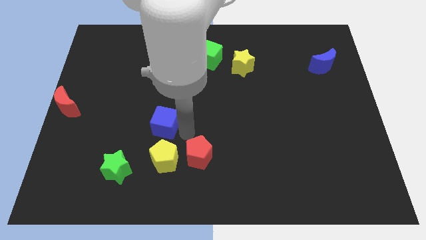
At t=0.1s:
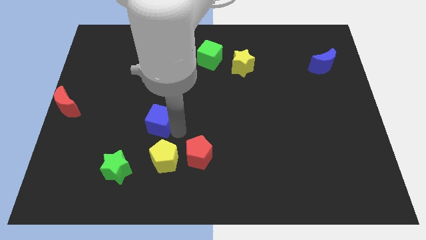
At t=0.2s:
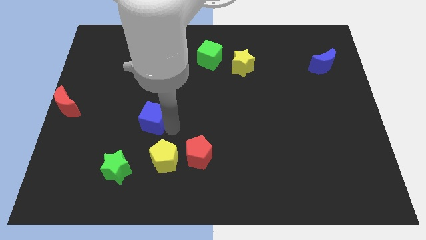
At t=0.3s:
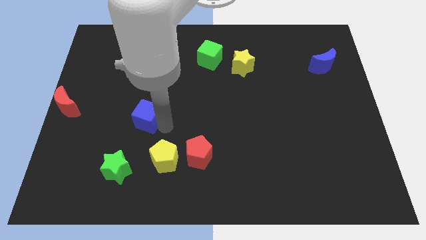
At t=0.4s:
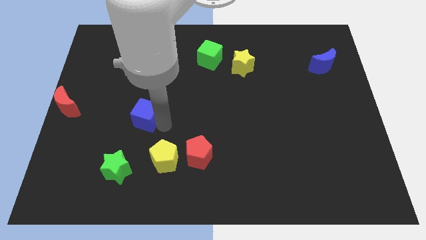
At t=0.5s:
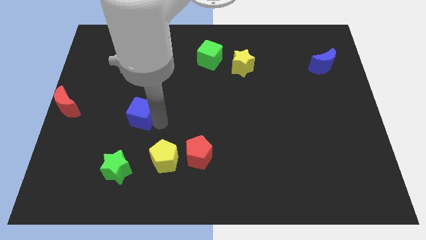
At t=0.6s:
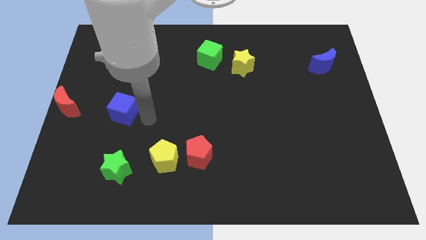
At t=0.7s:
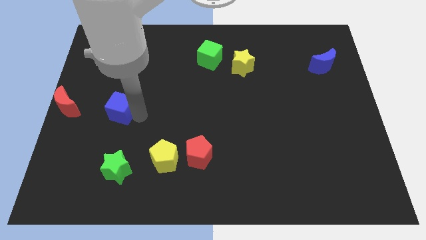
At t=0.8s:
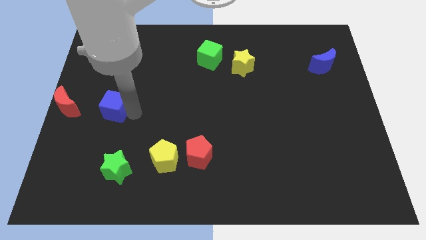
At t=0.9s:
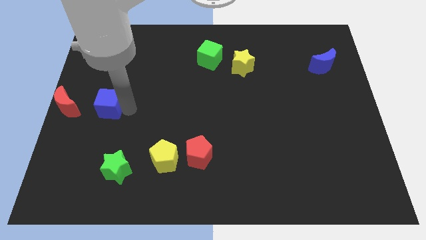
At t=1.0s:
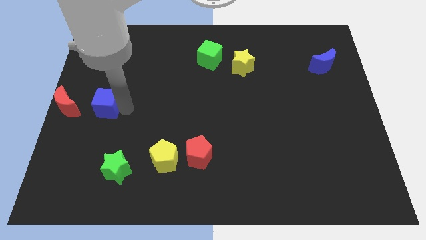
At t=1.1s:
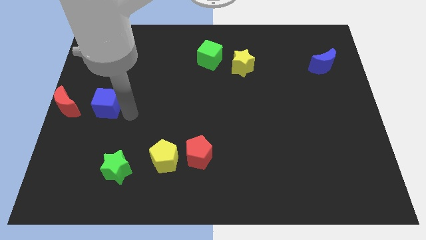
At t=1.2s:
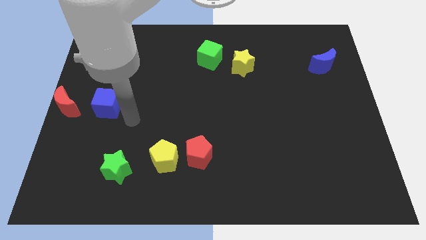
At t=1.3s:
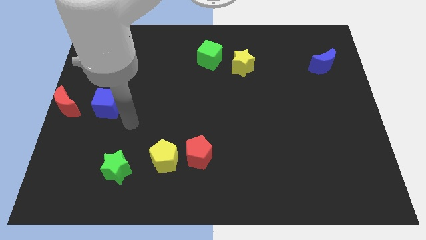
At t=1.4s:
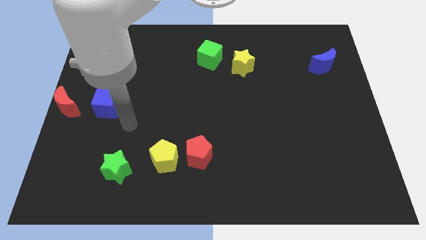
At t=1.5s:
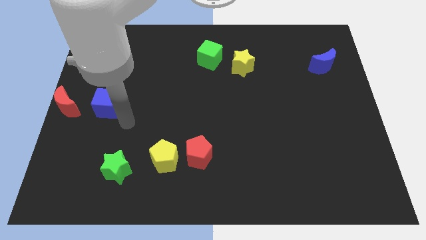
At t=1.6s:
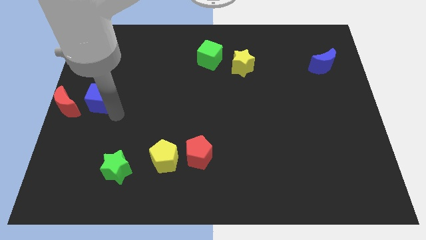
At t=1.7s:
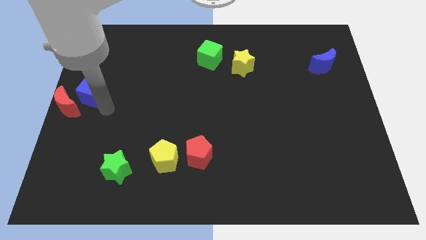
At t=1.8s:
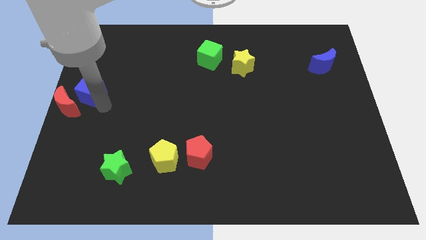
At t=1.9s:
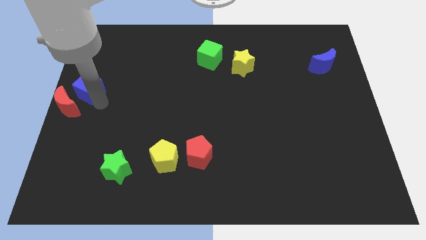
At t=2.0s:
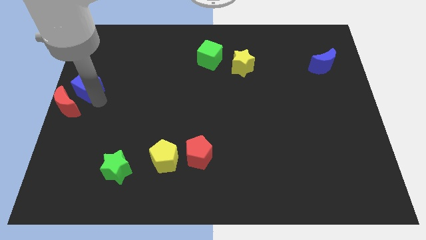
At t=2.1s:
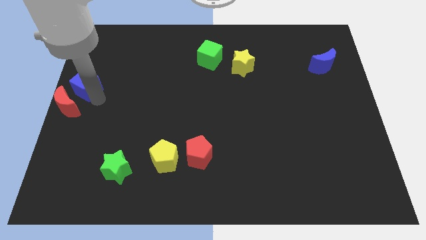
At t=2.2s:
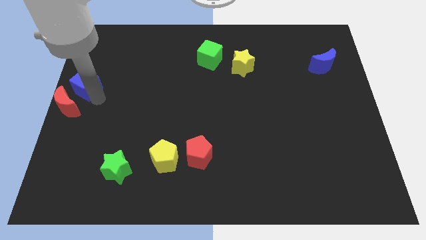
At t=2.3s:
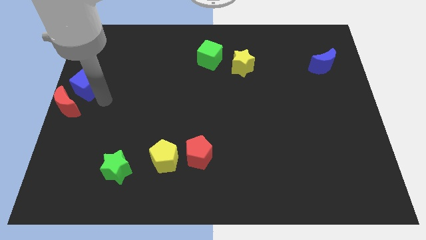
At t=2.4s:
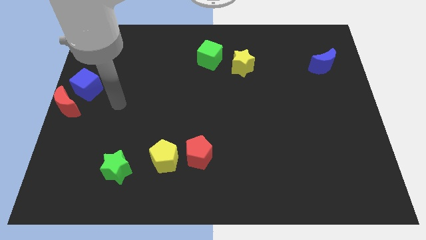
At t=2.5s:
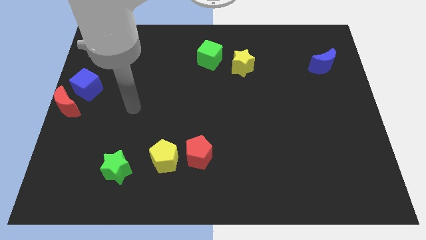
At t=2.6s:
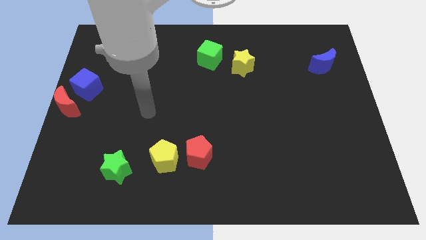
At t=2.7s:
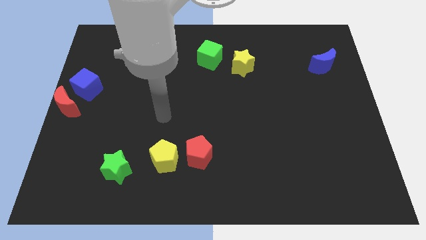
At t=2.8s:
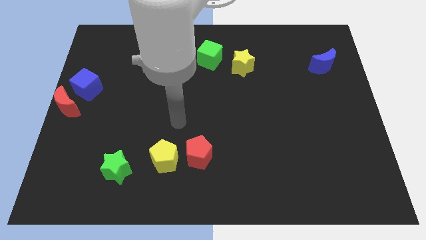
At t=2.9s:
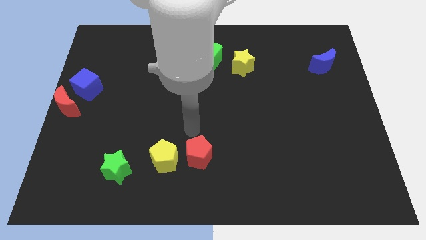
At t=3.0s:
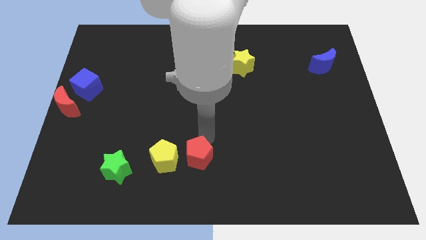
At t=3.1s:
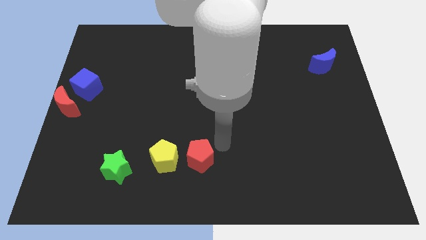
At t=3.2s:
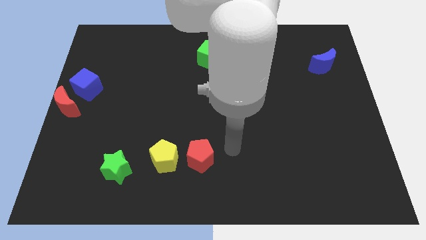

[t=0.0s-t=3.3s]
move the blue cube to the left side of the board

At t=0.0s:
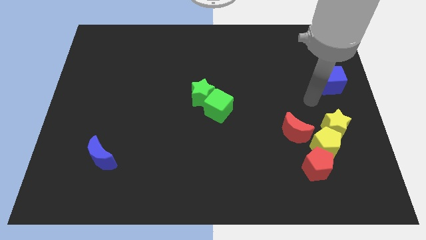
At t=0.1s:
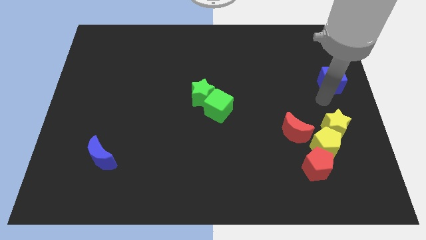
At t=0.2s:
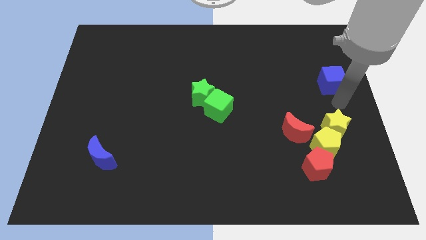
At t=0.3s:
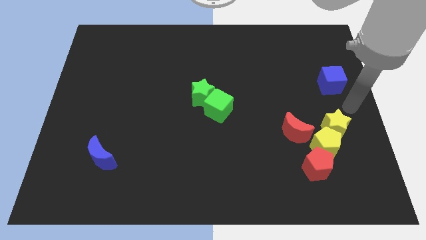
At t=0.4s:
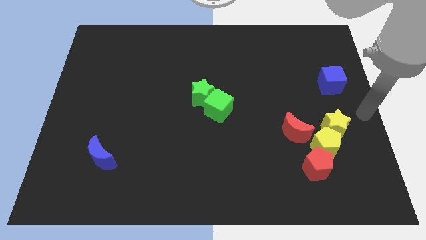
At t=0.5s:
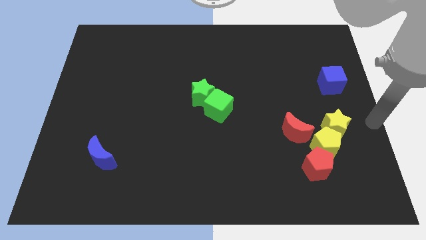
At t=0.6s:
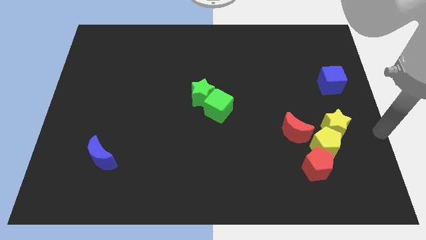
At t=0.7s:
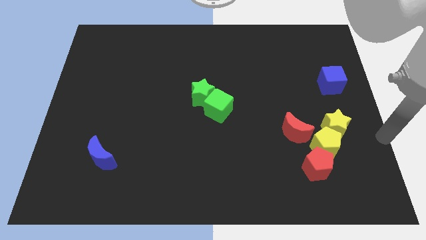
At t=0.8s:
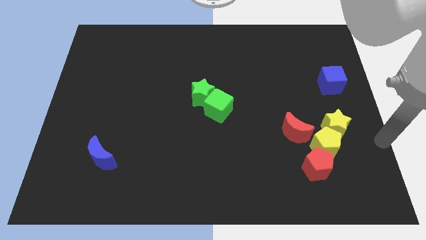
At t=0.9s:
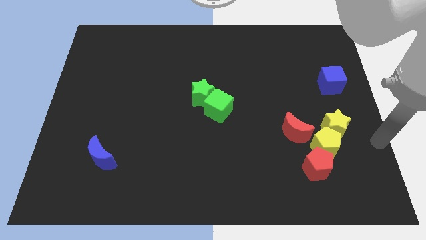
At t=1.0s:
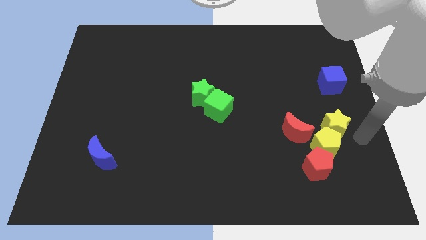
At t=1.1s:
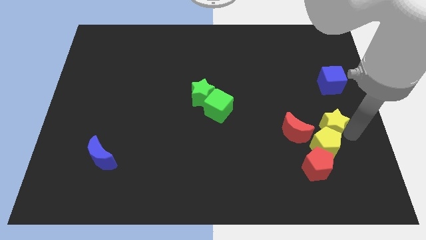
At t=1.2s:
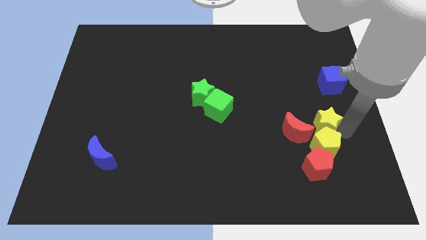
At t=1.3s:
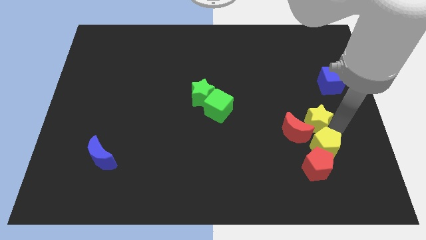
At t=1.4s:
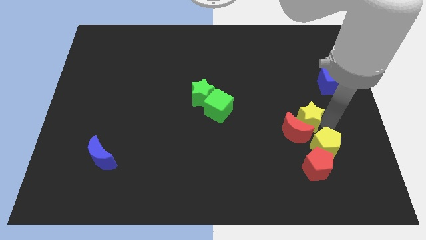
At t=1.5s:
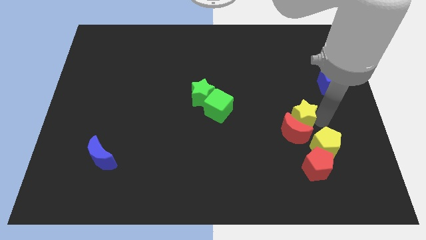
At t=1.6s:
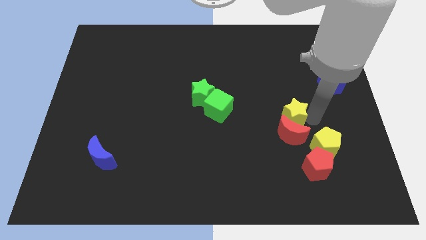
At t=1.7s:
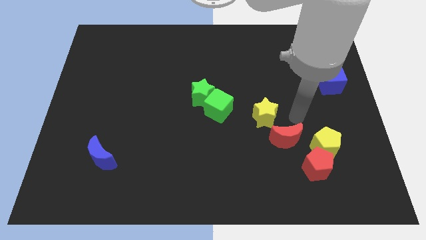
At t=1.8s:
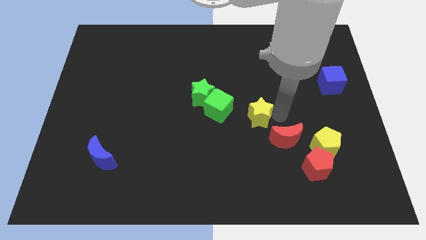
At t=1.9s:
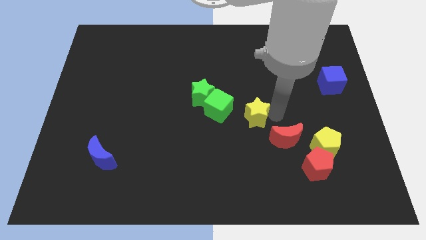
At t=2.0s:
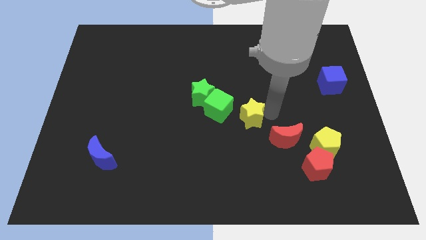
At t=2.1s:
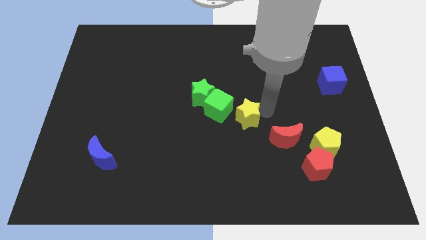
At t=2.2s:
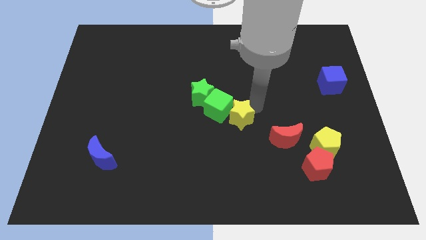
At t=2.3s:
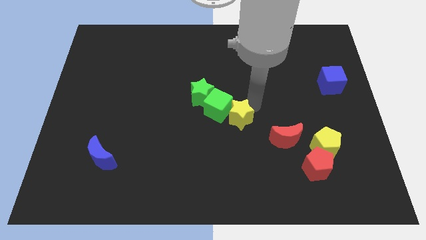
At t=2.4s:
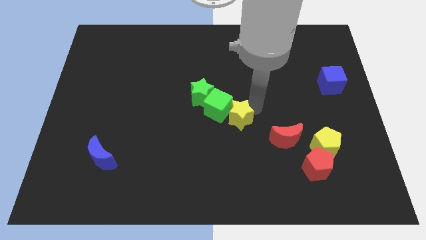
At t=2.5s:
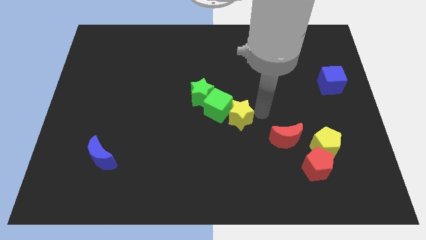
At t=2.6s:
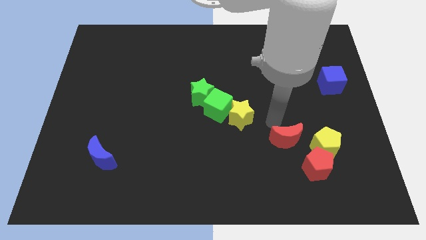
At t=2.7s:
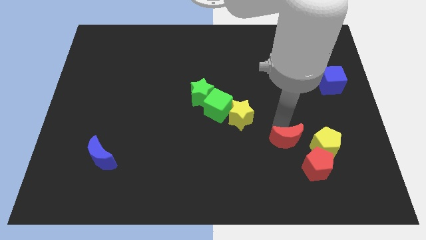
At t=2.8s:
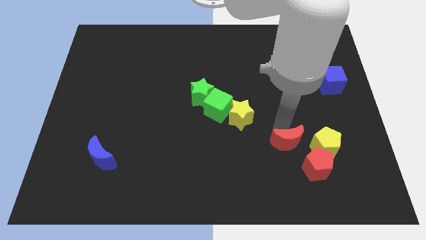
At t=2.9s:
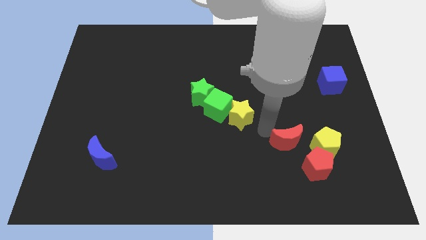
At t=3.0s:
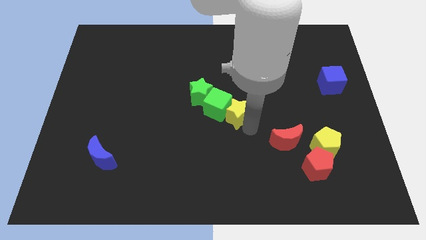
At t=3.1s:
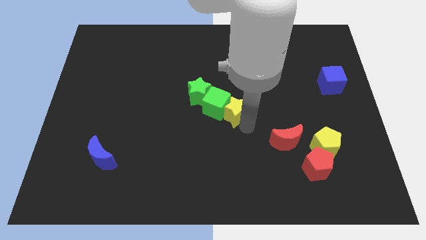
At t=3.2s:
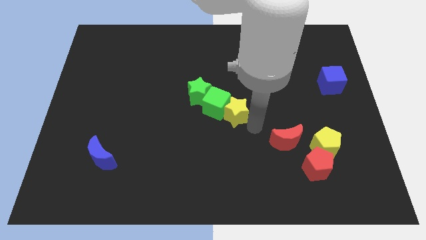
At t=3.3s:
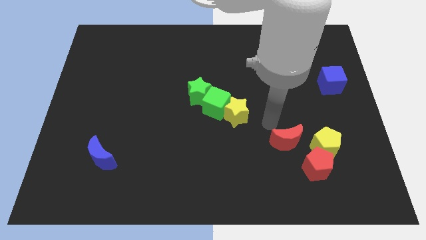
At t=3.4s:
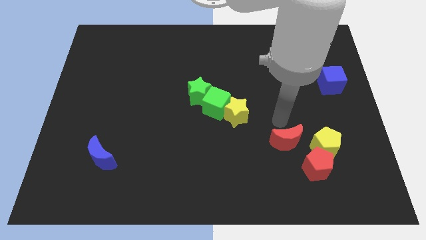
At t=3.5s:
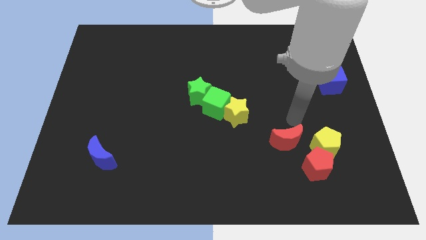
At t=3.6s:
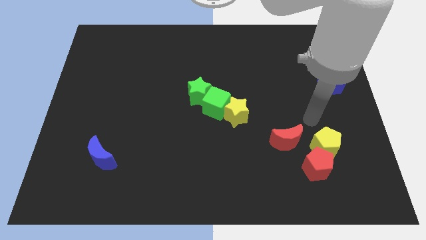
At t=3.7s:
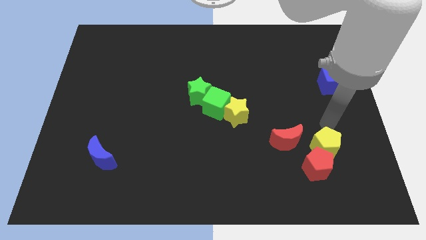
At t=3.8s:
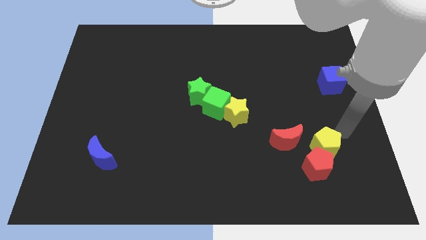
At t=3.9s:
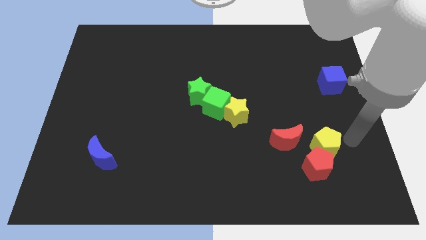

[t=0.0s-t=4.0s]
place the yellow star diagonally towards the right side of the green cube

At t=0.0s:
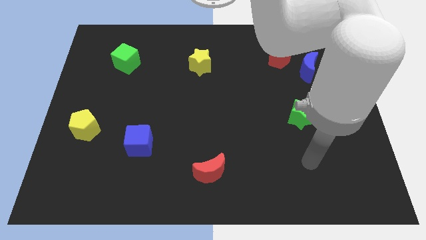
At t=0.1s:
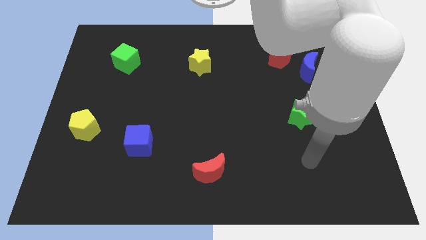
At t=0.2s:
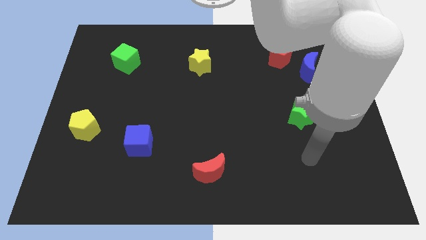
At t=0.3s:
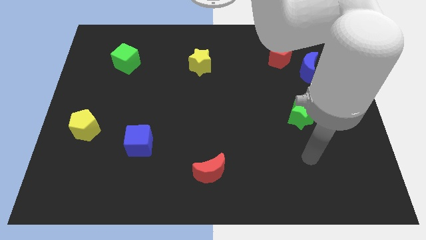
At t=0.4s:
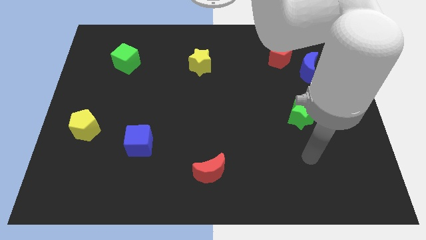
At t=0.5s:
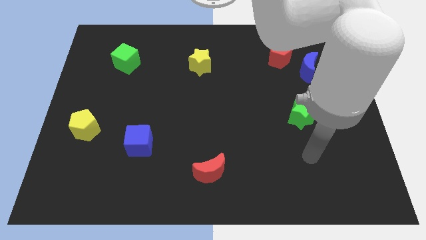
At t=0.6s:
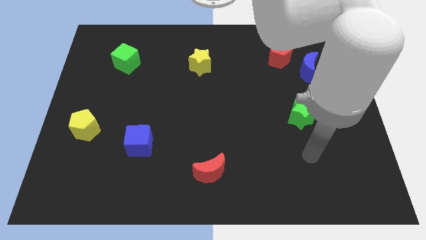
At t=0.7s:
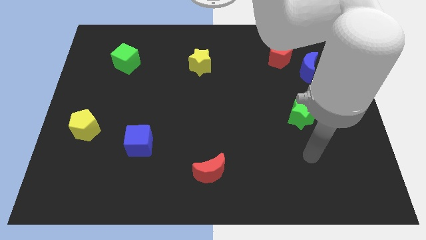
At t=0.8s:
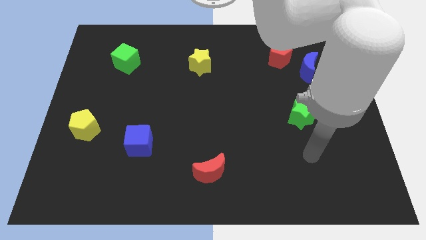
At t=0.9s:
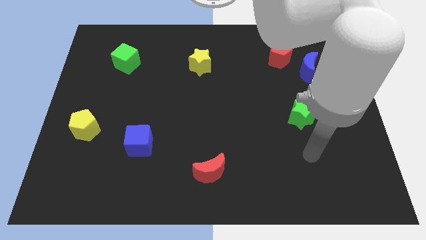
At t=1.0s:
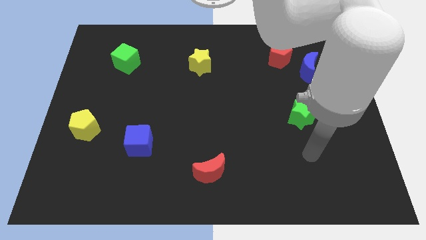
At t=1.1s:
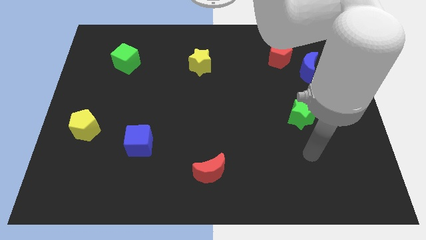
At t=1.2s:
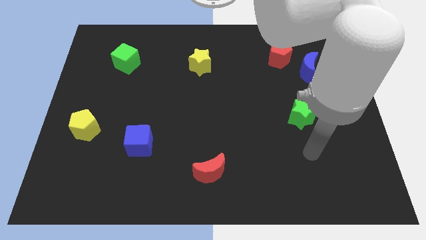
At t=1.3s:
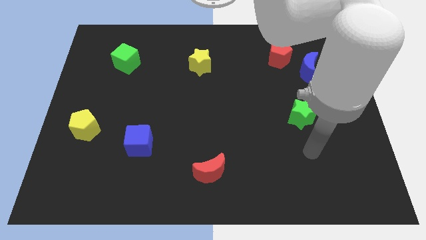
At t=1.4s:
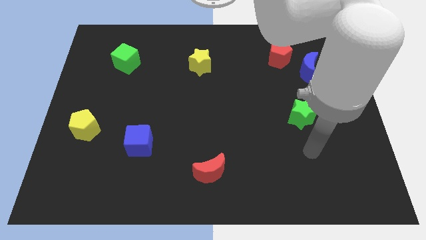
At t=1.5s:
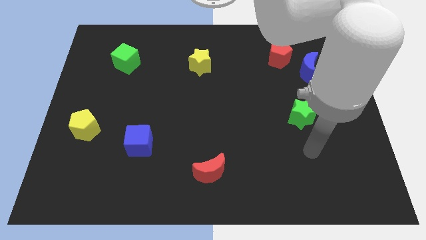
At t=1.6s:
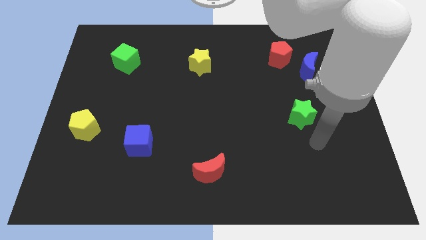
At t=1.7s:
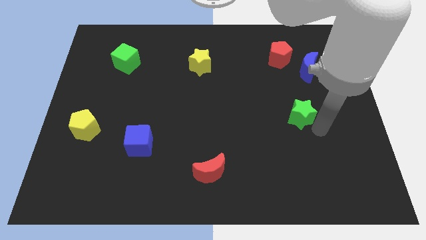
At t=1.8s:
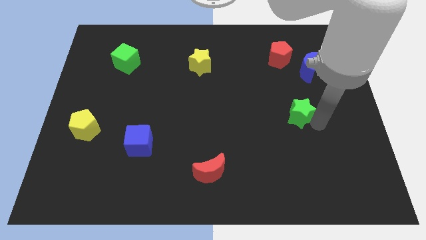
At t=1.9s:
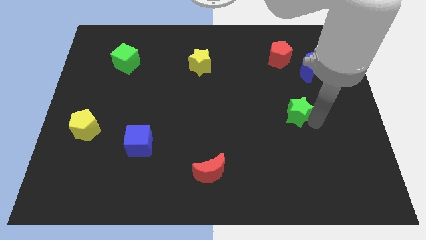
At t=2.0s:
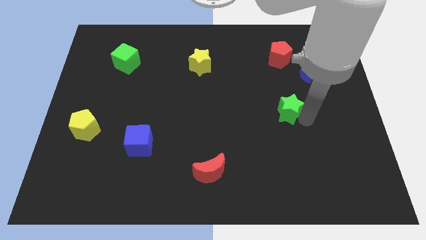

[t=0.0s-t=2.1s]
touch the bottom of green star
